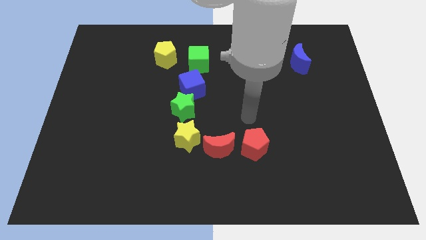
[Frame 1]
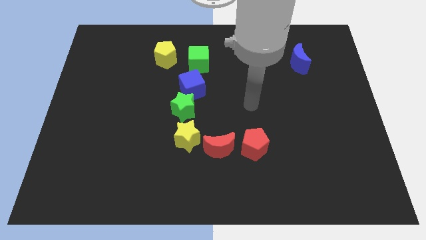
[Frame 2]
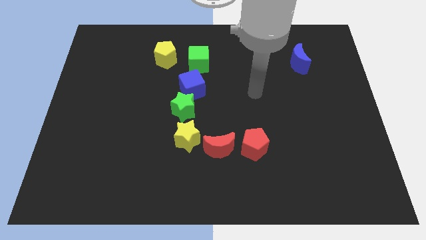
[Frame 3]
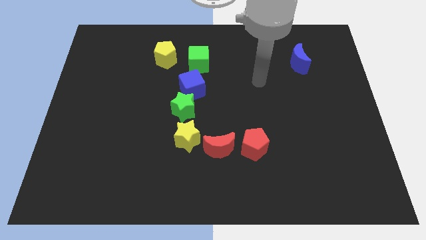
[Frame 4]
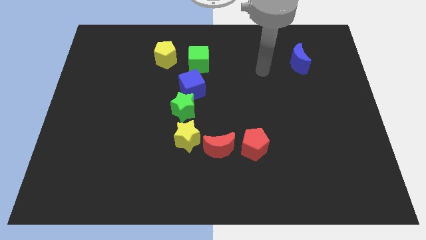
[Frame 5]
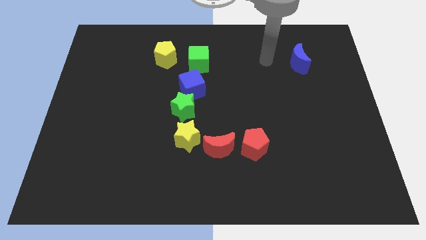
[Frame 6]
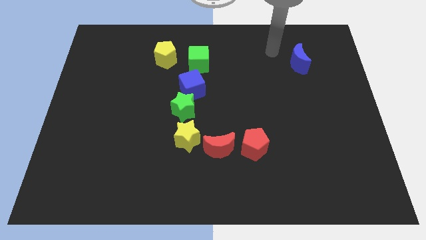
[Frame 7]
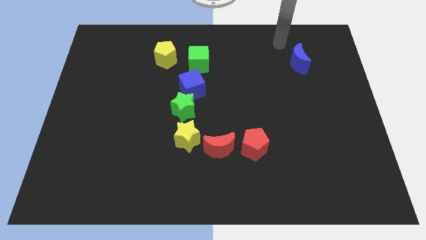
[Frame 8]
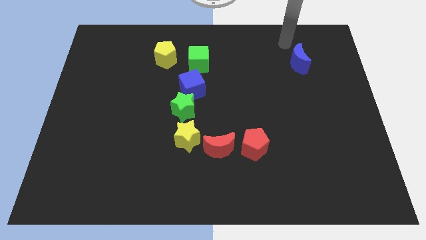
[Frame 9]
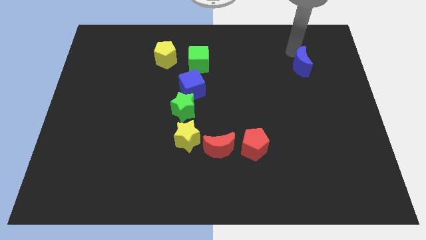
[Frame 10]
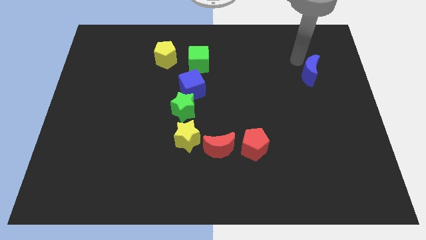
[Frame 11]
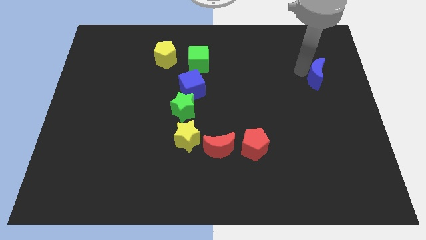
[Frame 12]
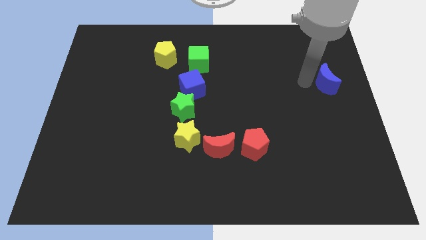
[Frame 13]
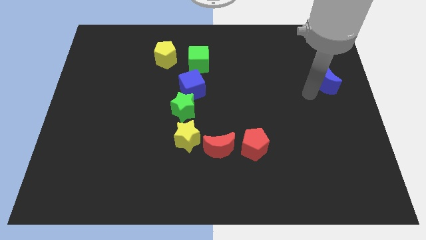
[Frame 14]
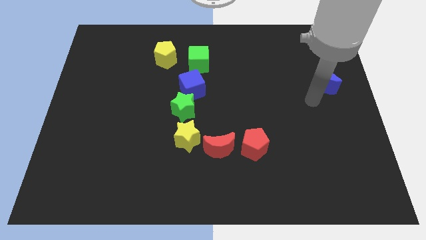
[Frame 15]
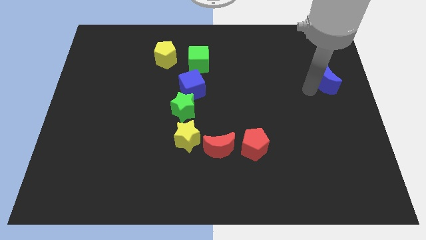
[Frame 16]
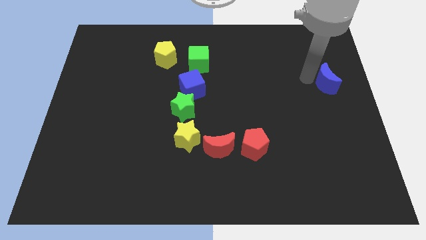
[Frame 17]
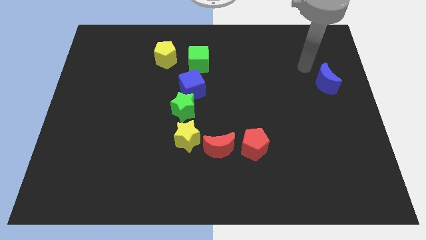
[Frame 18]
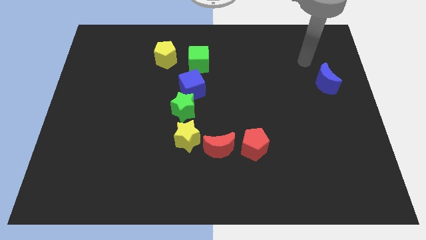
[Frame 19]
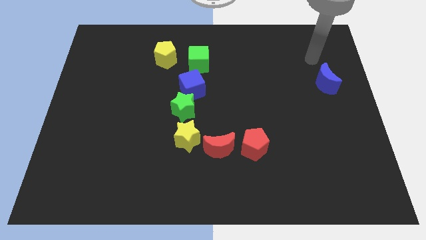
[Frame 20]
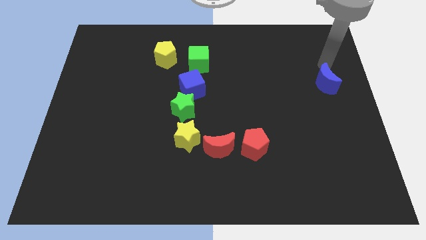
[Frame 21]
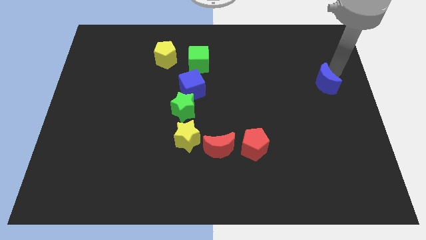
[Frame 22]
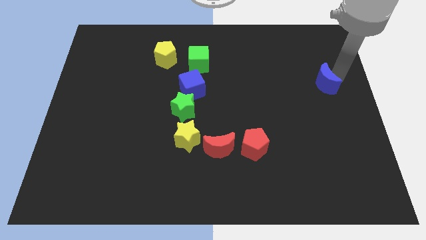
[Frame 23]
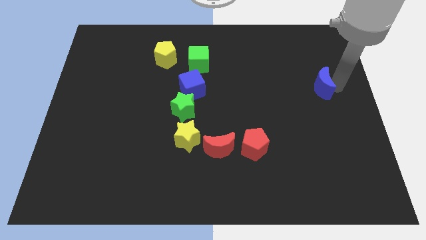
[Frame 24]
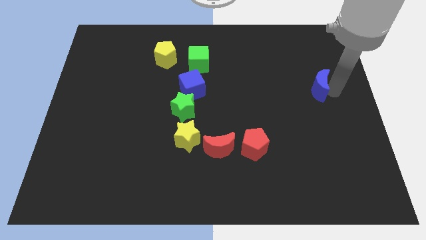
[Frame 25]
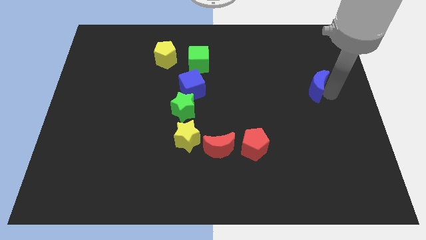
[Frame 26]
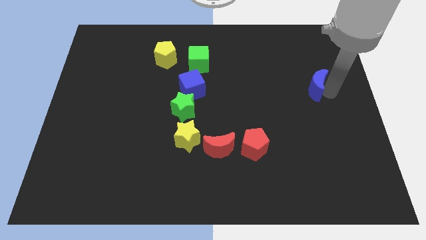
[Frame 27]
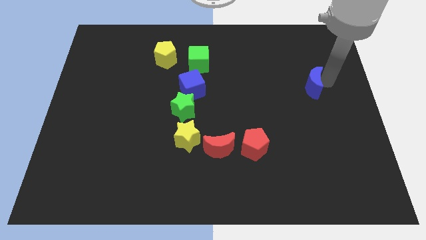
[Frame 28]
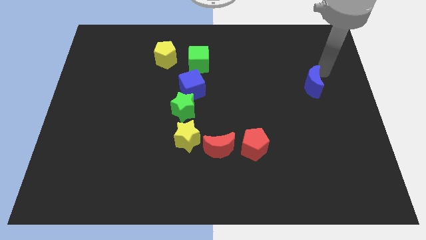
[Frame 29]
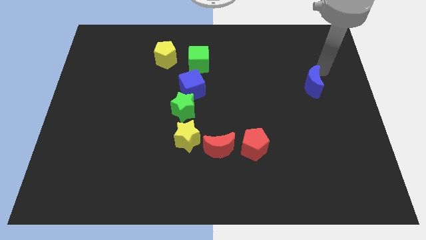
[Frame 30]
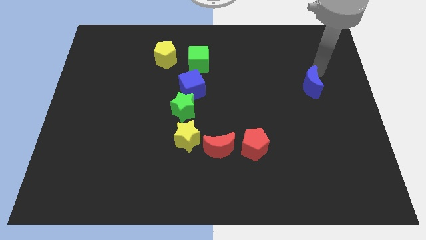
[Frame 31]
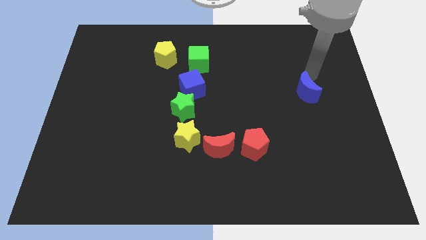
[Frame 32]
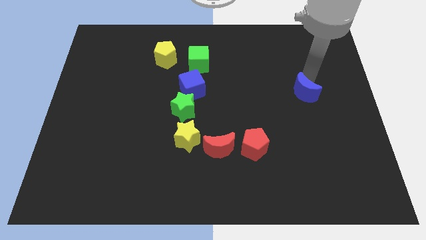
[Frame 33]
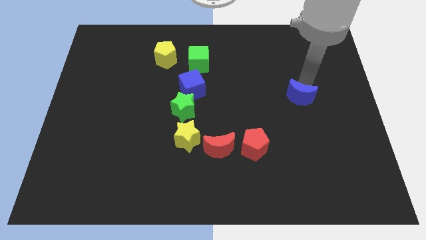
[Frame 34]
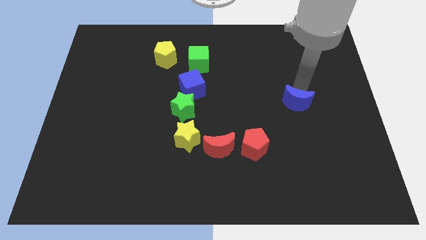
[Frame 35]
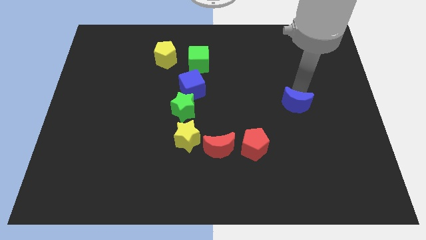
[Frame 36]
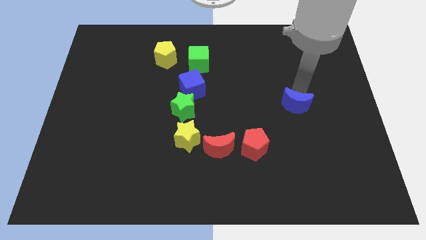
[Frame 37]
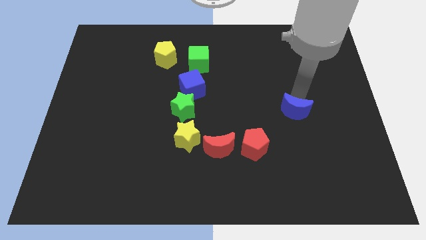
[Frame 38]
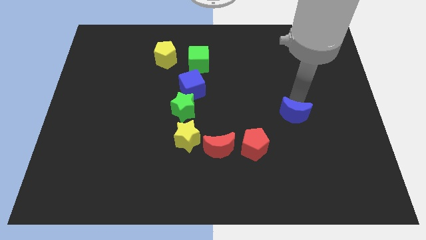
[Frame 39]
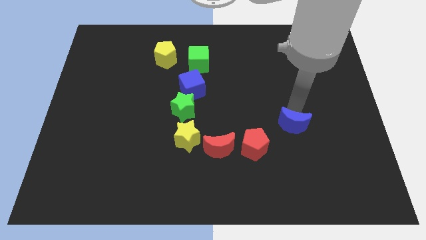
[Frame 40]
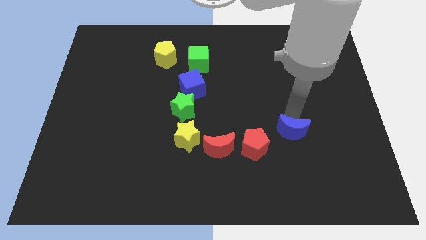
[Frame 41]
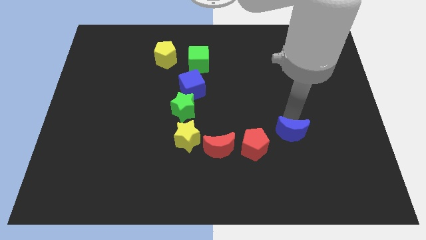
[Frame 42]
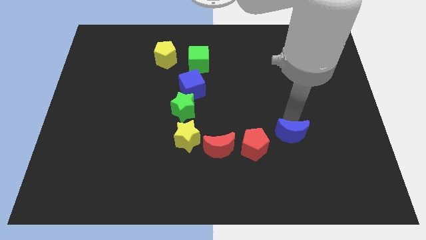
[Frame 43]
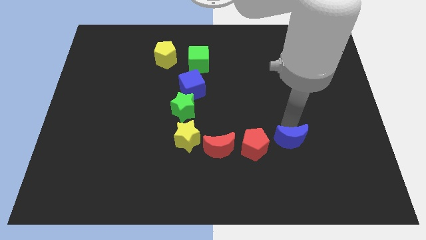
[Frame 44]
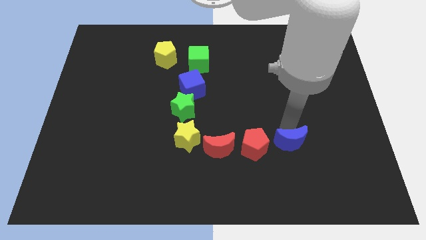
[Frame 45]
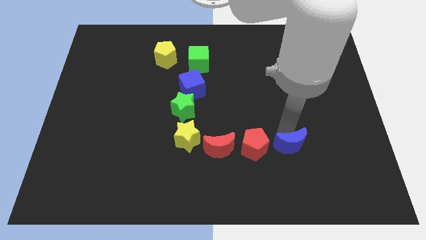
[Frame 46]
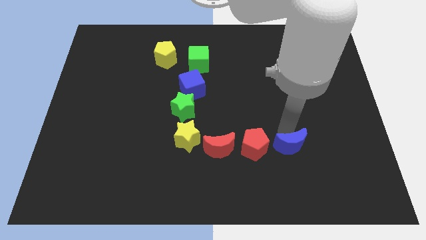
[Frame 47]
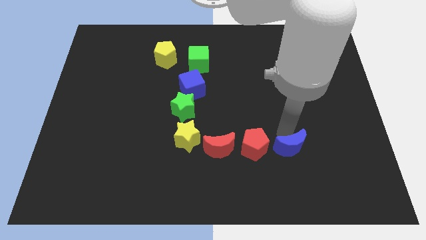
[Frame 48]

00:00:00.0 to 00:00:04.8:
move the blue moon to the right of the red pentagon

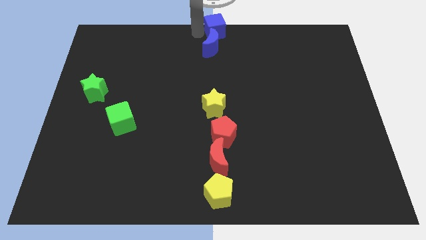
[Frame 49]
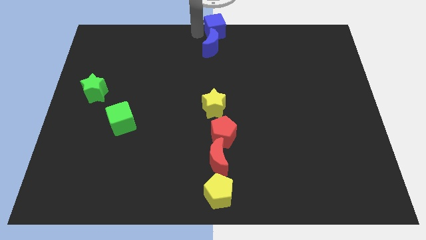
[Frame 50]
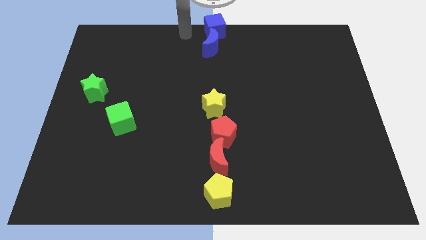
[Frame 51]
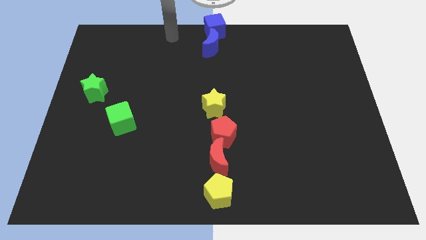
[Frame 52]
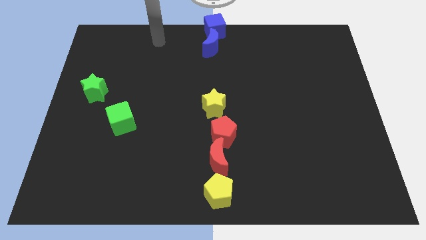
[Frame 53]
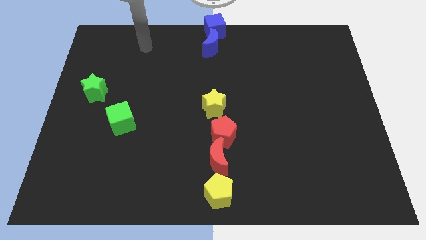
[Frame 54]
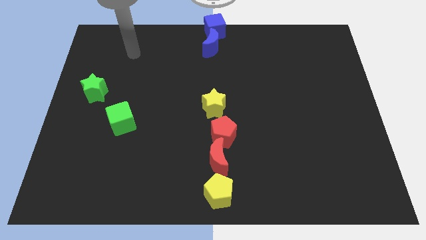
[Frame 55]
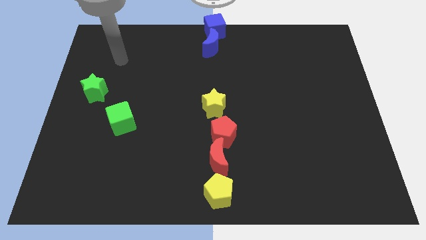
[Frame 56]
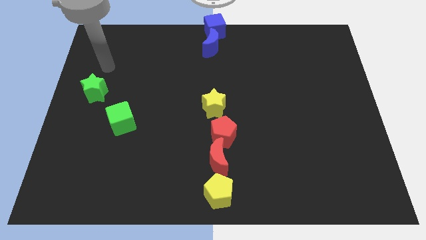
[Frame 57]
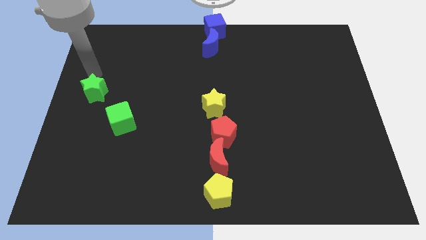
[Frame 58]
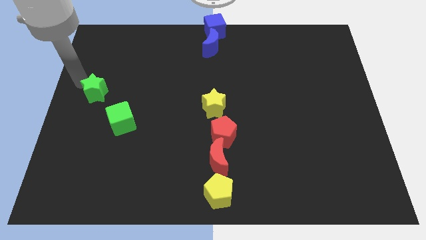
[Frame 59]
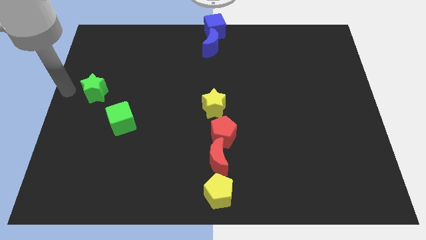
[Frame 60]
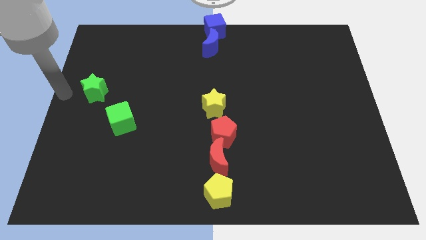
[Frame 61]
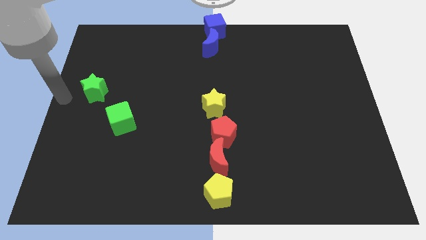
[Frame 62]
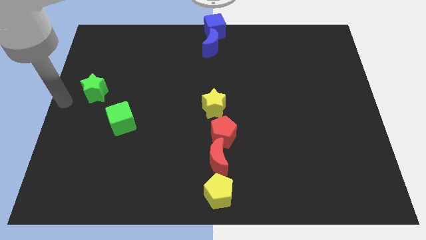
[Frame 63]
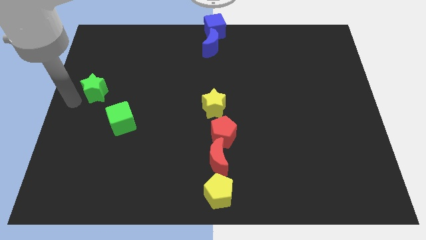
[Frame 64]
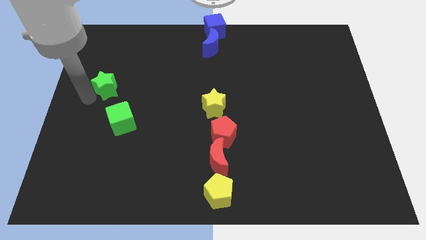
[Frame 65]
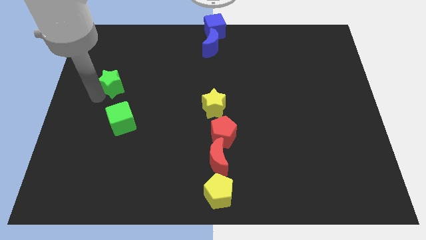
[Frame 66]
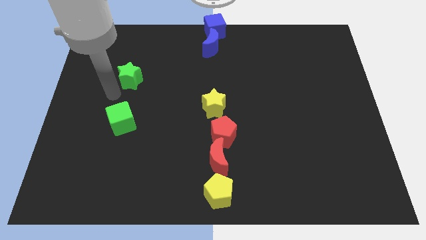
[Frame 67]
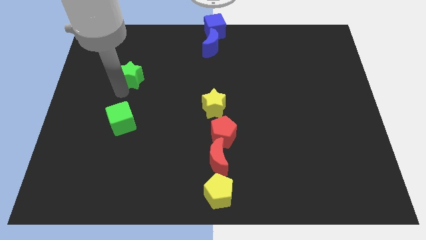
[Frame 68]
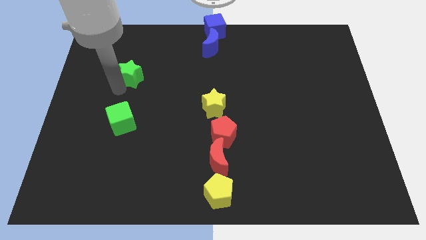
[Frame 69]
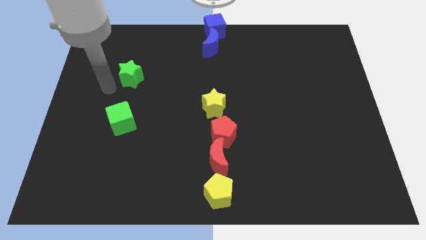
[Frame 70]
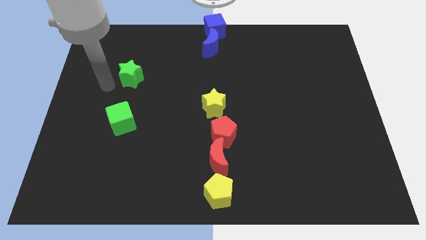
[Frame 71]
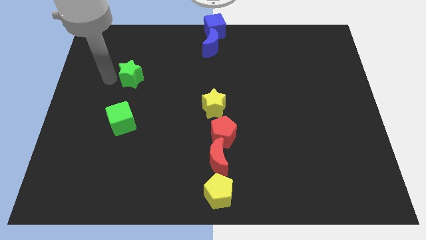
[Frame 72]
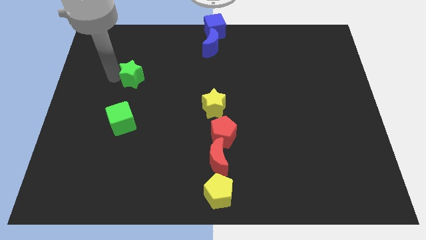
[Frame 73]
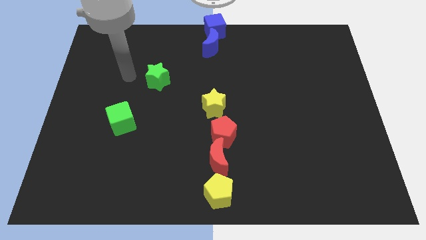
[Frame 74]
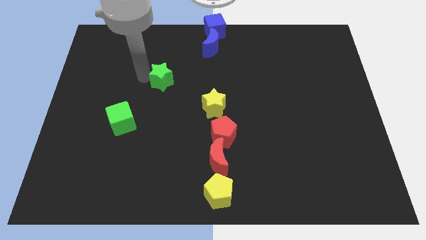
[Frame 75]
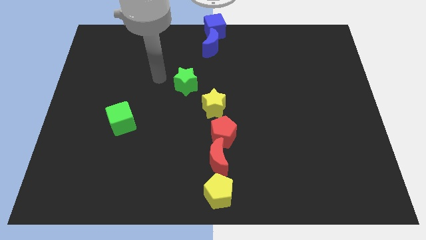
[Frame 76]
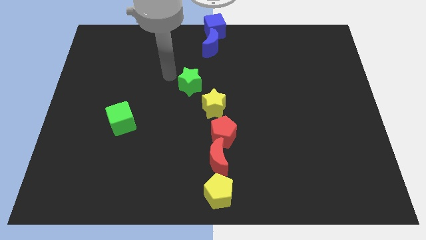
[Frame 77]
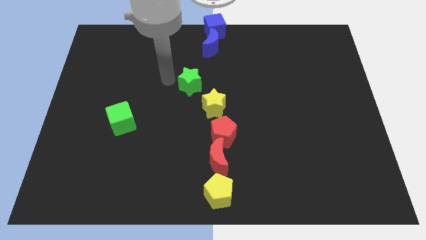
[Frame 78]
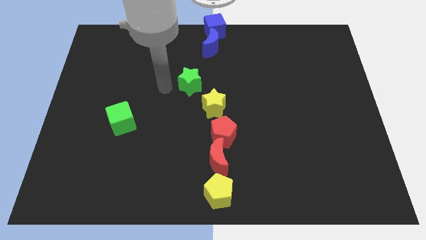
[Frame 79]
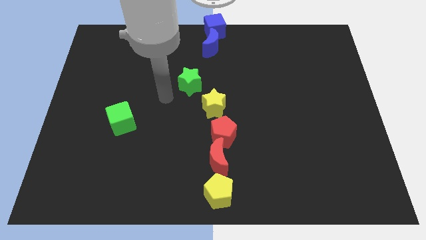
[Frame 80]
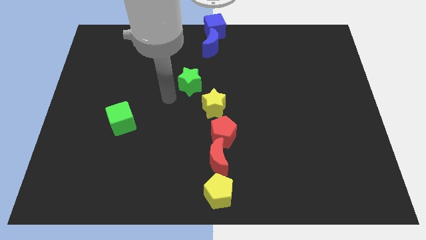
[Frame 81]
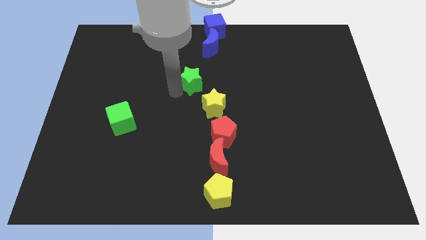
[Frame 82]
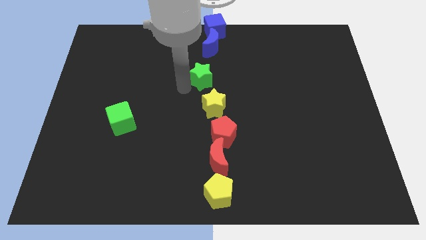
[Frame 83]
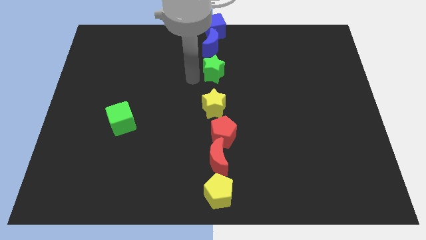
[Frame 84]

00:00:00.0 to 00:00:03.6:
place green star top of the yellow star

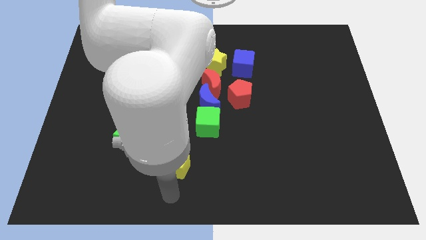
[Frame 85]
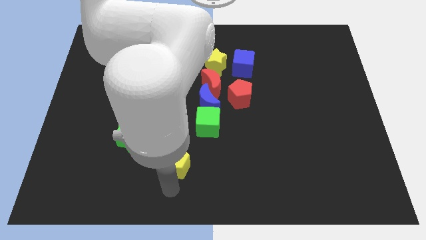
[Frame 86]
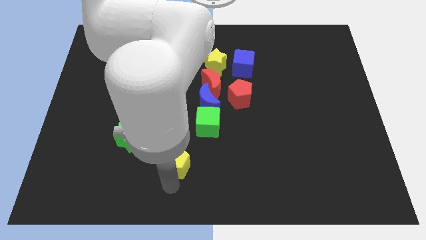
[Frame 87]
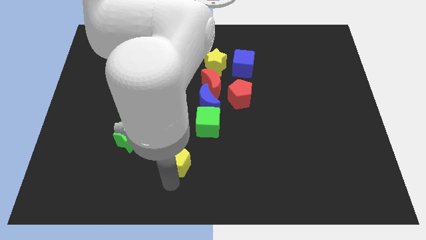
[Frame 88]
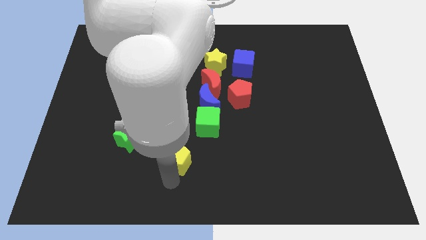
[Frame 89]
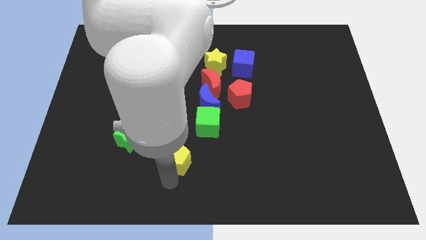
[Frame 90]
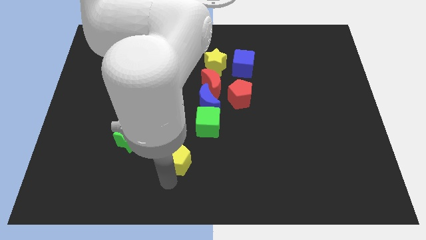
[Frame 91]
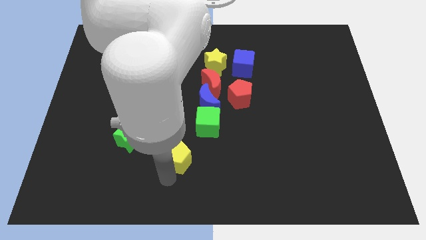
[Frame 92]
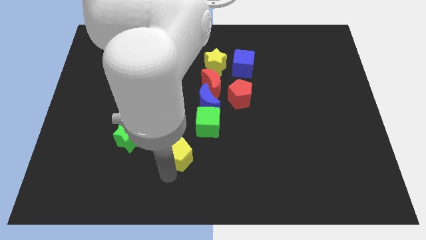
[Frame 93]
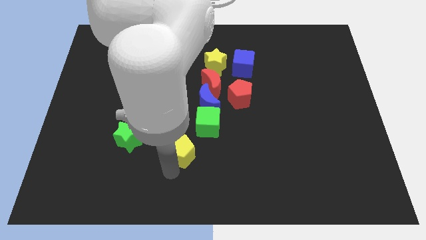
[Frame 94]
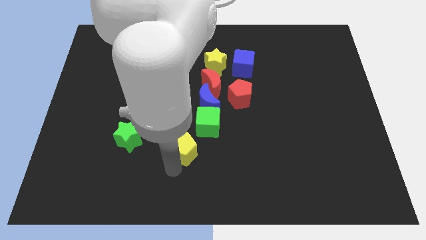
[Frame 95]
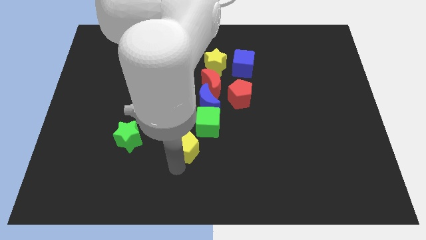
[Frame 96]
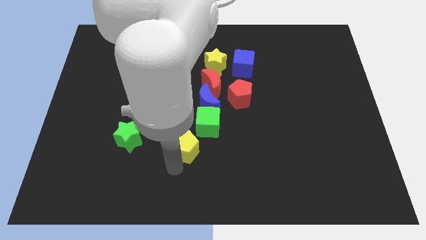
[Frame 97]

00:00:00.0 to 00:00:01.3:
place the yellow pentagon at the bottom left side of green cube
